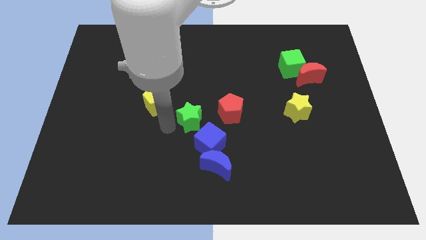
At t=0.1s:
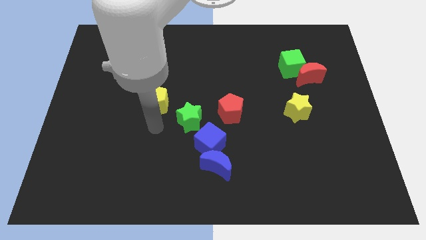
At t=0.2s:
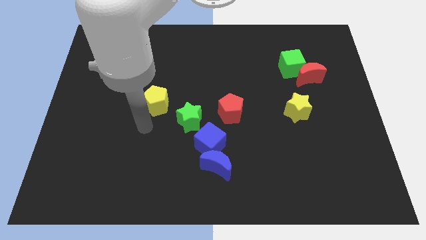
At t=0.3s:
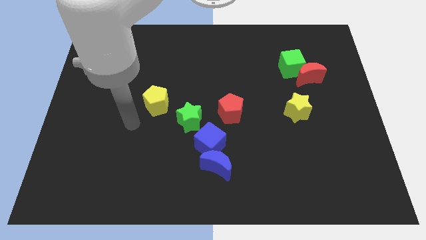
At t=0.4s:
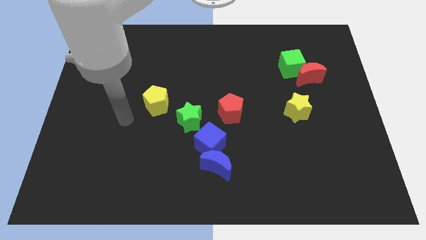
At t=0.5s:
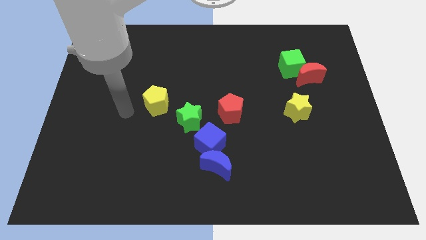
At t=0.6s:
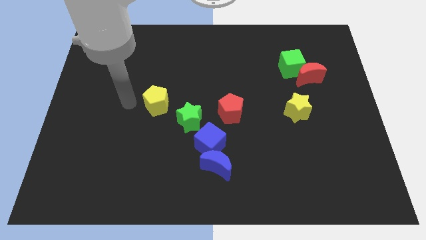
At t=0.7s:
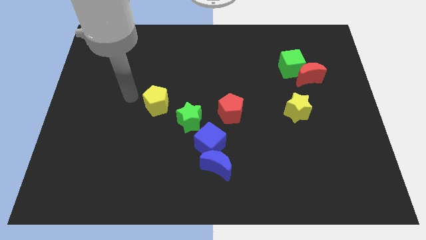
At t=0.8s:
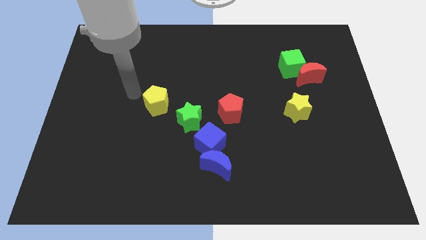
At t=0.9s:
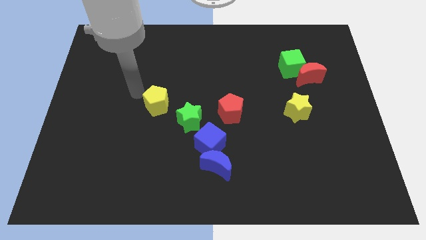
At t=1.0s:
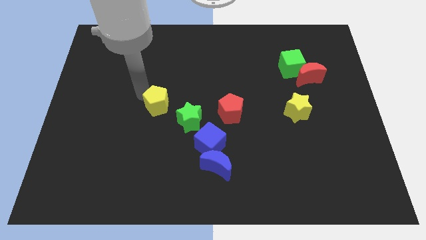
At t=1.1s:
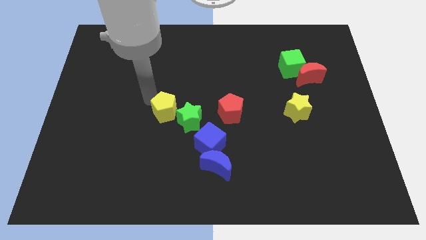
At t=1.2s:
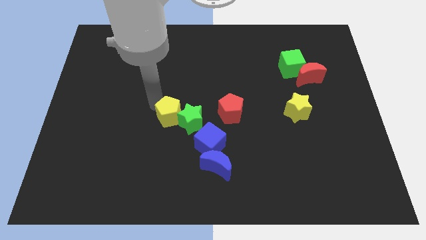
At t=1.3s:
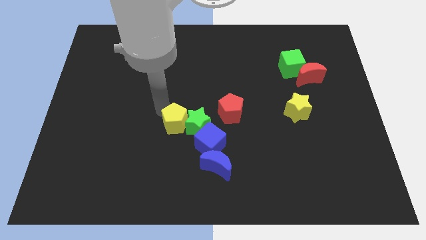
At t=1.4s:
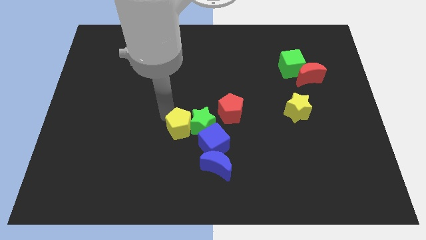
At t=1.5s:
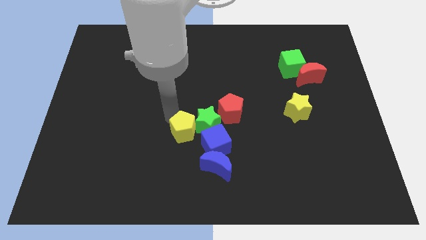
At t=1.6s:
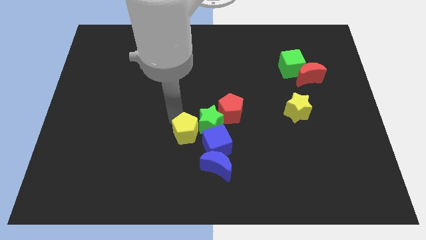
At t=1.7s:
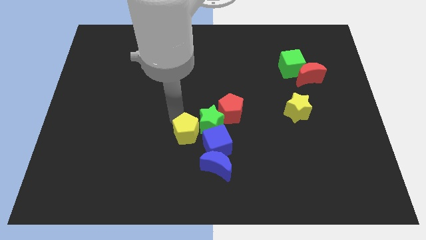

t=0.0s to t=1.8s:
push the yellow pentagon into the green star

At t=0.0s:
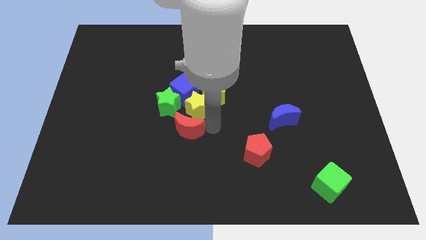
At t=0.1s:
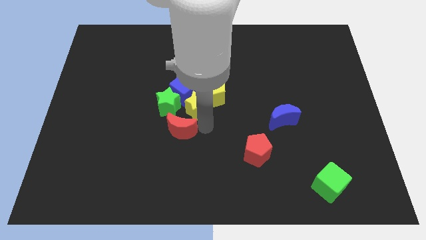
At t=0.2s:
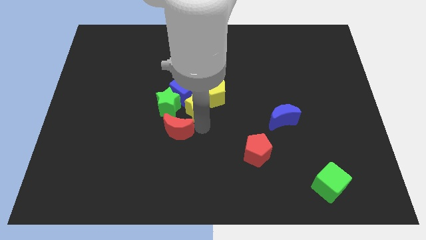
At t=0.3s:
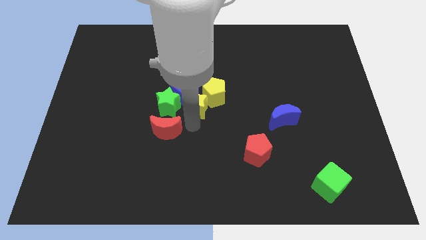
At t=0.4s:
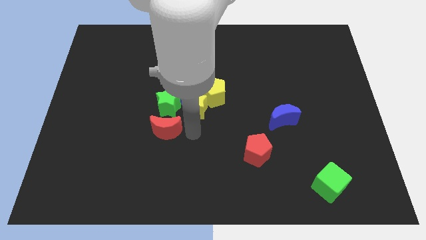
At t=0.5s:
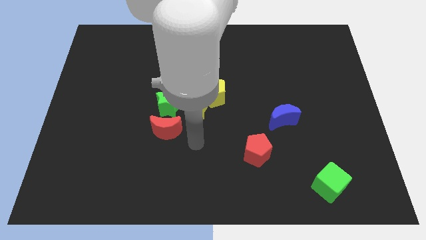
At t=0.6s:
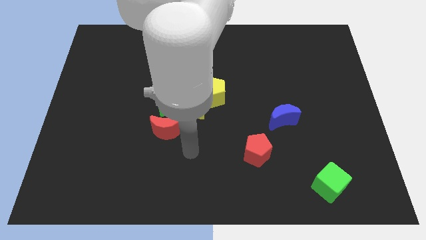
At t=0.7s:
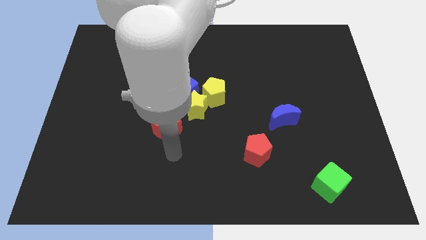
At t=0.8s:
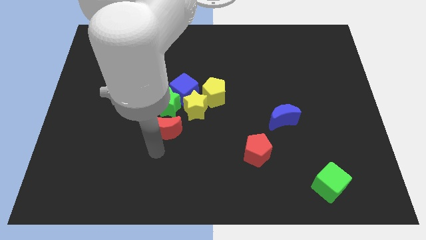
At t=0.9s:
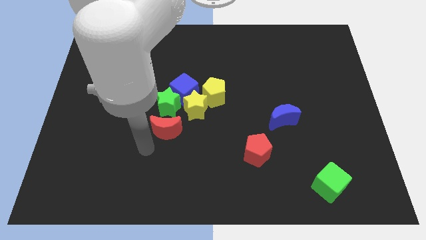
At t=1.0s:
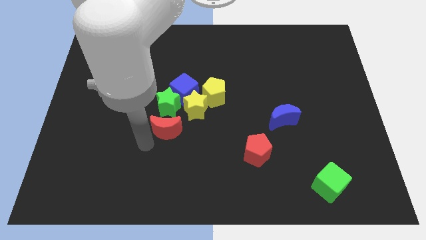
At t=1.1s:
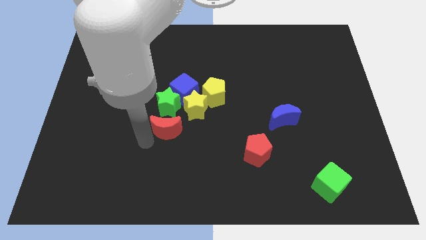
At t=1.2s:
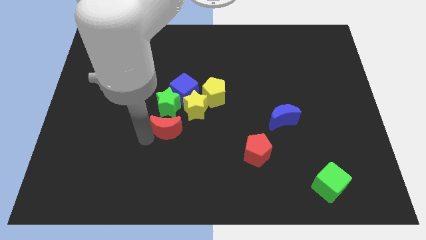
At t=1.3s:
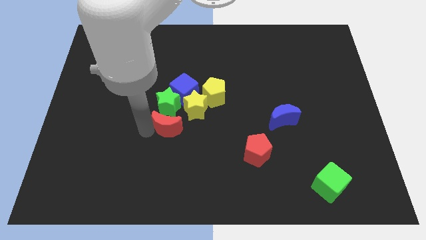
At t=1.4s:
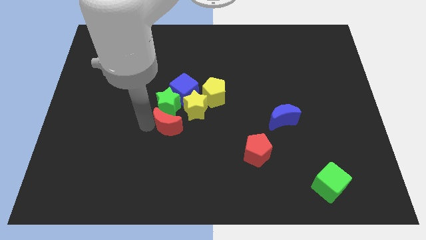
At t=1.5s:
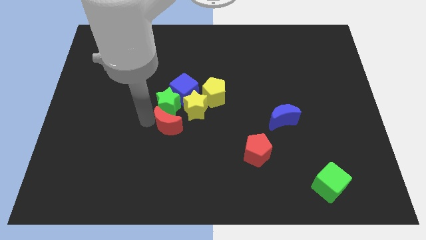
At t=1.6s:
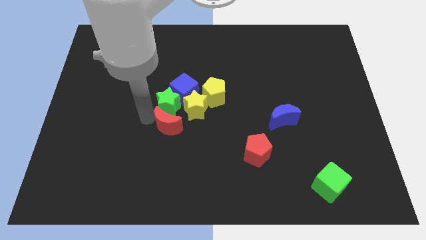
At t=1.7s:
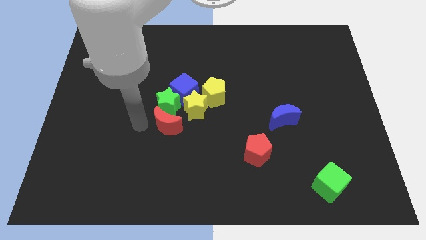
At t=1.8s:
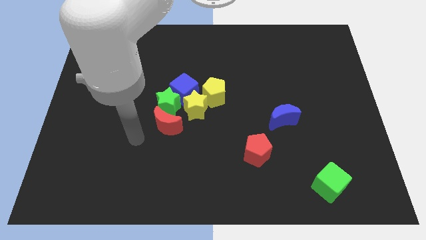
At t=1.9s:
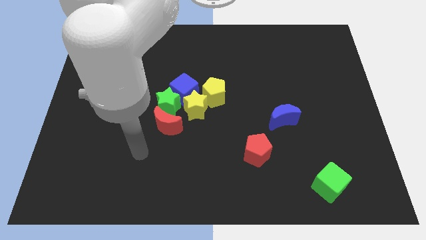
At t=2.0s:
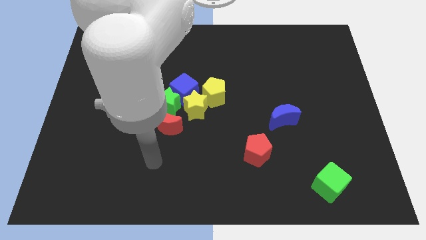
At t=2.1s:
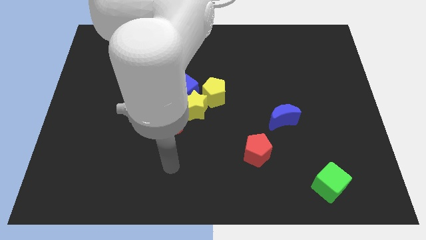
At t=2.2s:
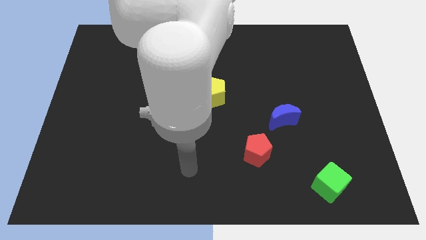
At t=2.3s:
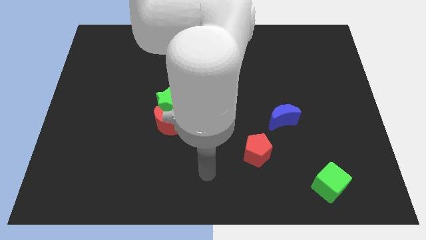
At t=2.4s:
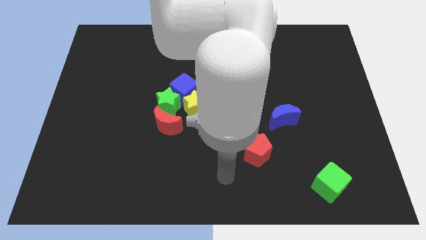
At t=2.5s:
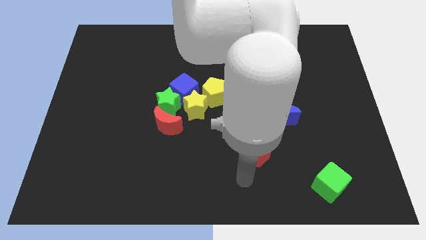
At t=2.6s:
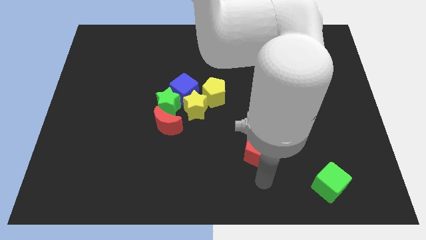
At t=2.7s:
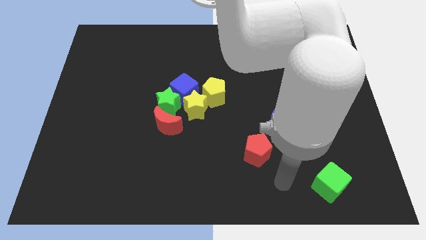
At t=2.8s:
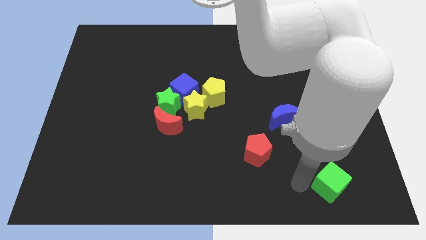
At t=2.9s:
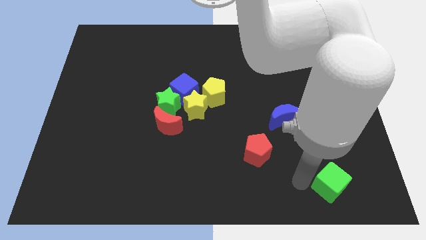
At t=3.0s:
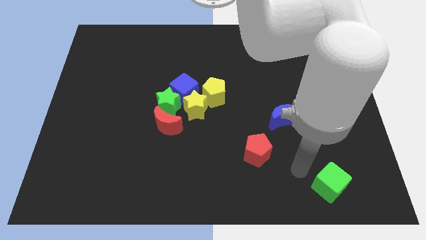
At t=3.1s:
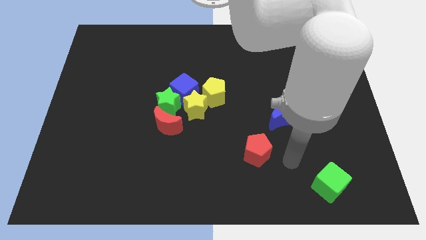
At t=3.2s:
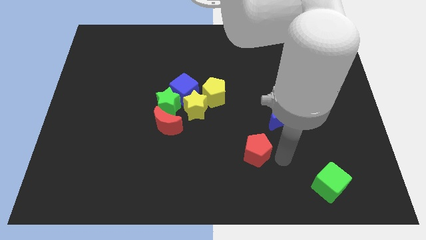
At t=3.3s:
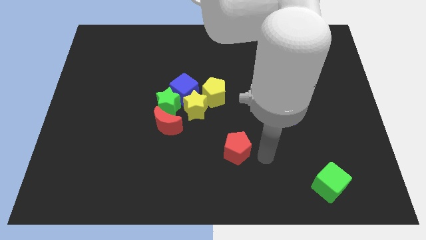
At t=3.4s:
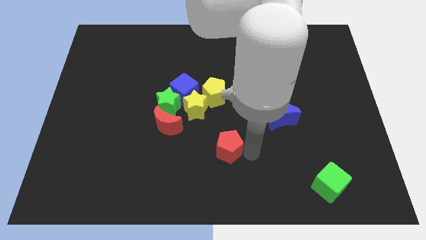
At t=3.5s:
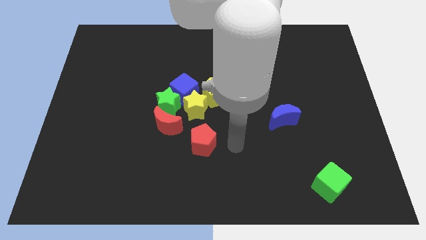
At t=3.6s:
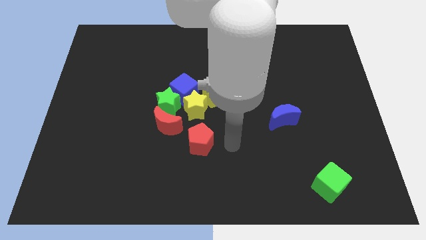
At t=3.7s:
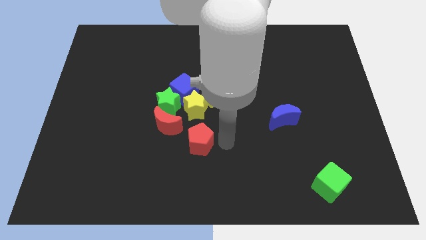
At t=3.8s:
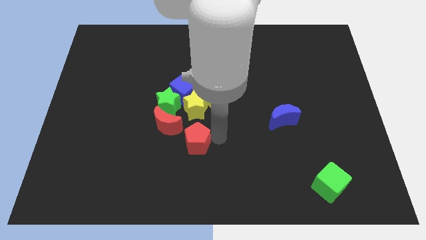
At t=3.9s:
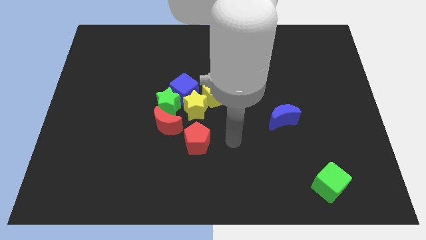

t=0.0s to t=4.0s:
push the red pentagon below the red moon

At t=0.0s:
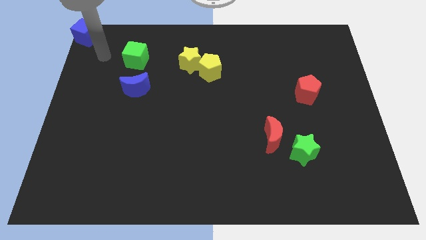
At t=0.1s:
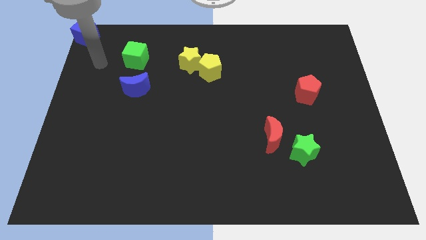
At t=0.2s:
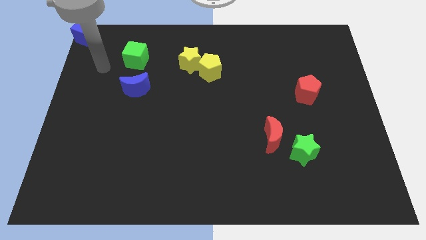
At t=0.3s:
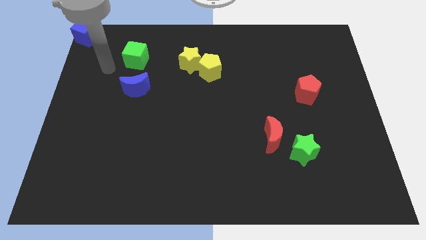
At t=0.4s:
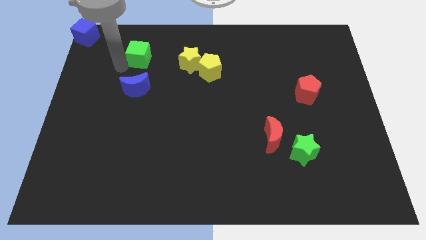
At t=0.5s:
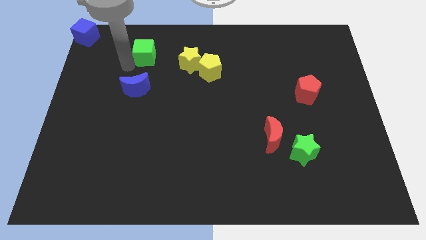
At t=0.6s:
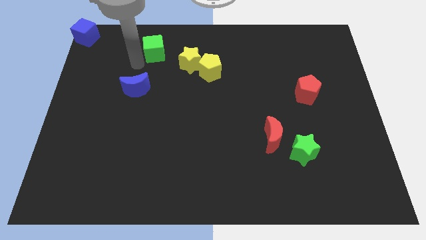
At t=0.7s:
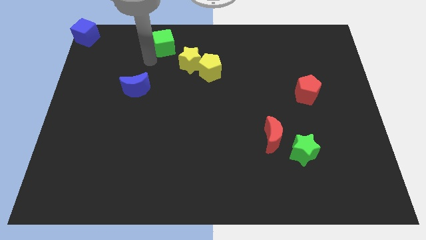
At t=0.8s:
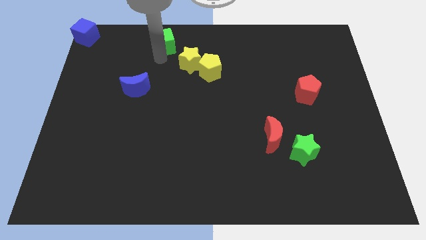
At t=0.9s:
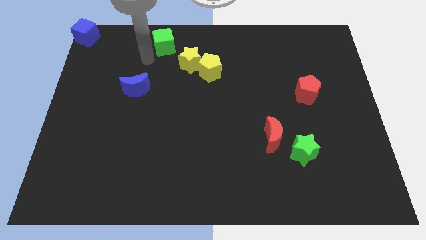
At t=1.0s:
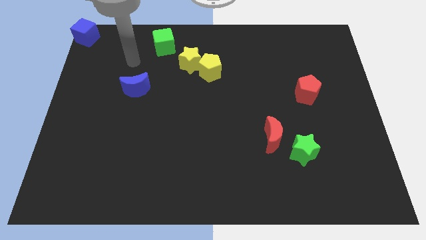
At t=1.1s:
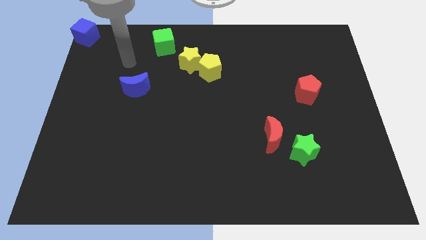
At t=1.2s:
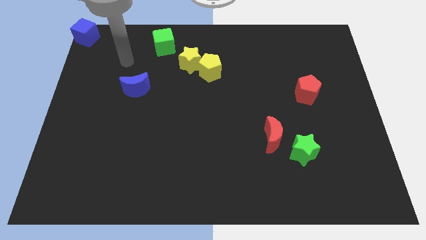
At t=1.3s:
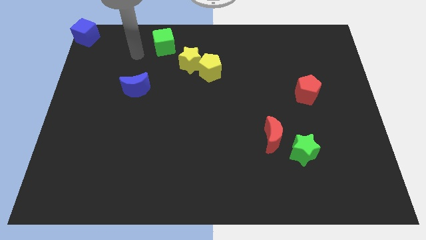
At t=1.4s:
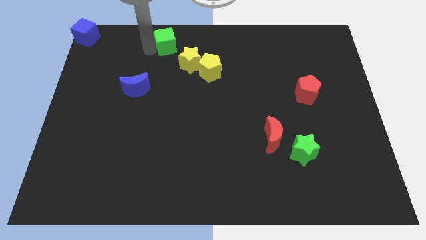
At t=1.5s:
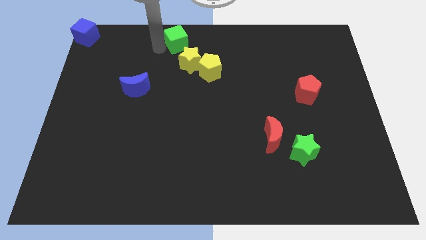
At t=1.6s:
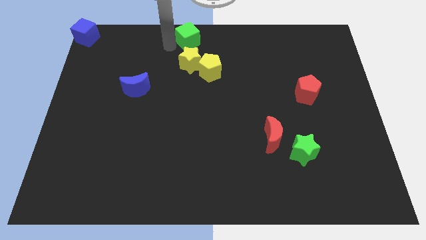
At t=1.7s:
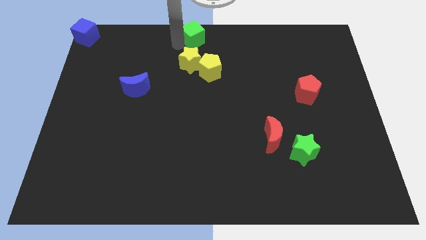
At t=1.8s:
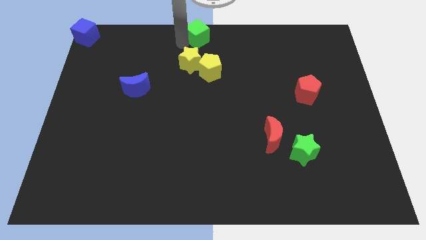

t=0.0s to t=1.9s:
push the green cube towards right

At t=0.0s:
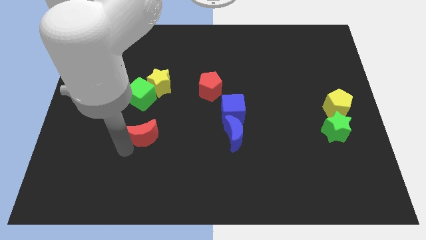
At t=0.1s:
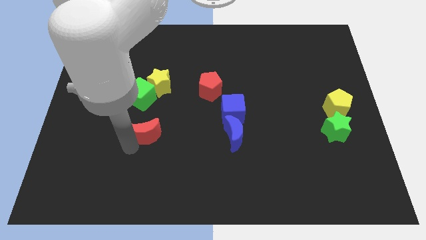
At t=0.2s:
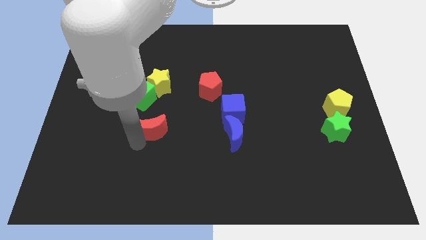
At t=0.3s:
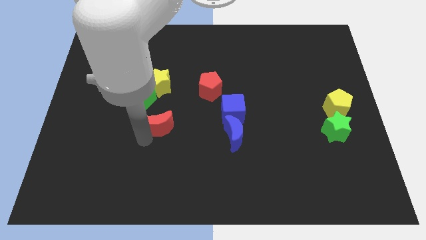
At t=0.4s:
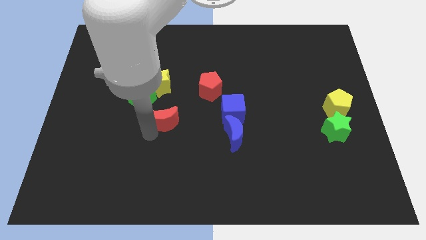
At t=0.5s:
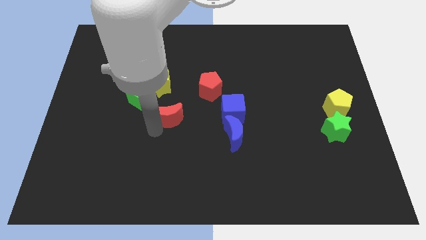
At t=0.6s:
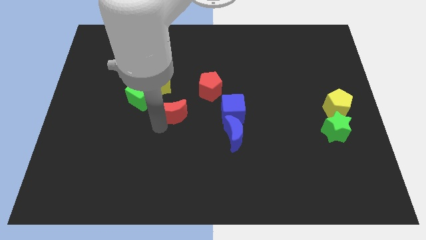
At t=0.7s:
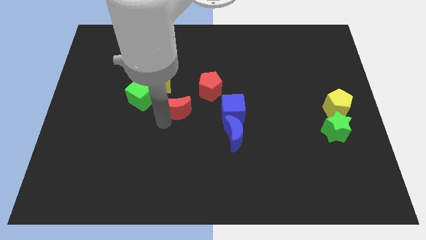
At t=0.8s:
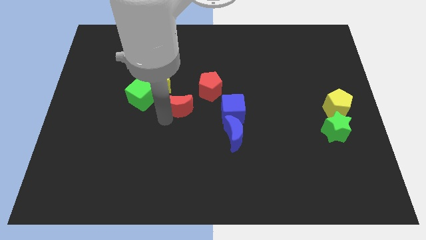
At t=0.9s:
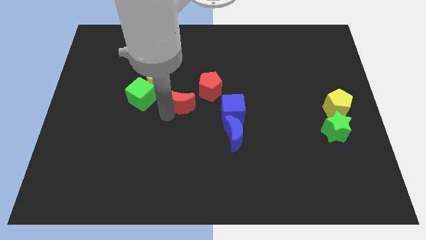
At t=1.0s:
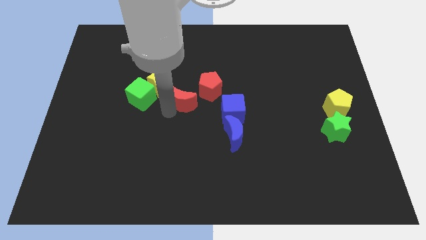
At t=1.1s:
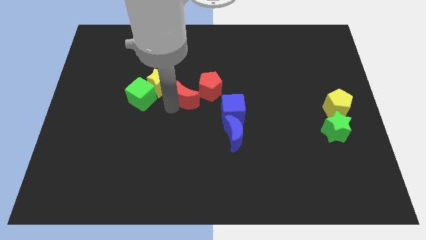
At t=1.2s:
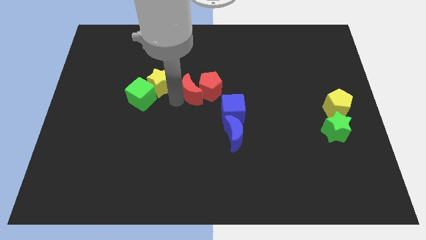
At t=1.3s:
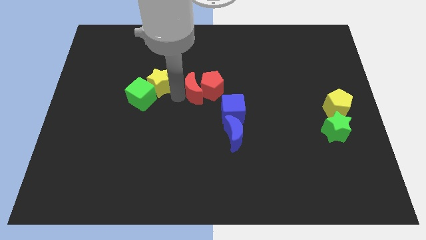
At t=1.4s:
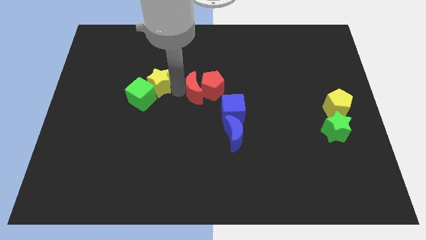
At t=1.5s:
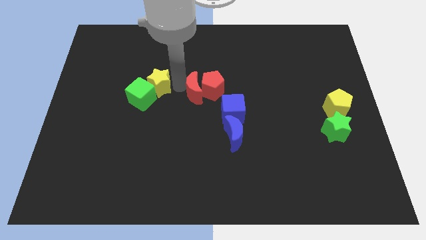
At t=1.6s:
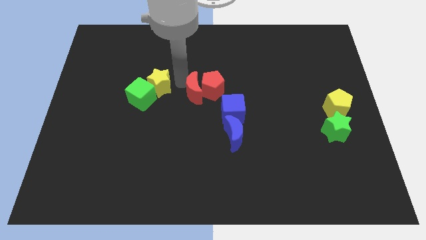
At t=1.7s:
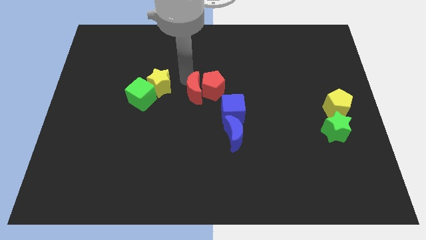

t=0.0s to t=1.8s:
push the red crescent into the red pentagon
